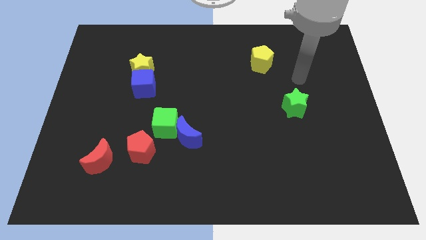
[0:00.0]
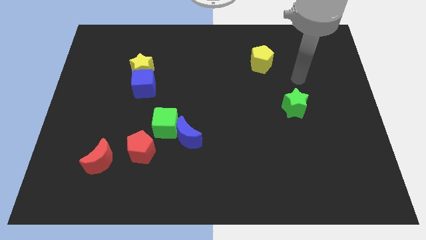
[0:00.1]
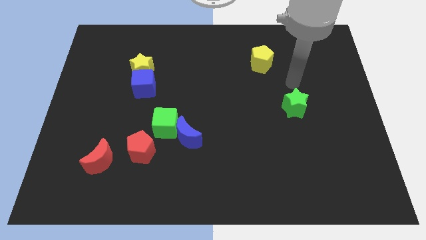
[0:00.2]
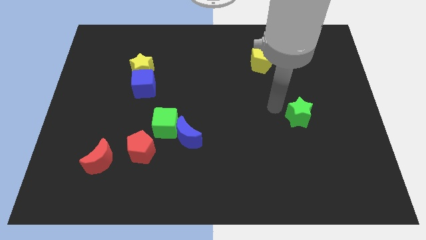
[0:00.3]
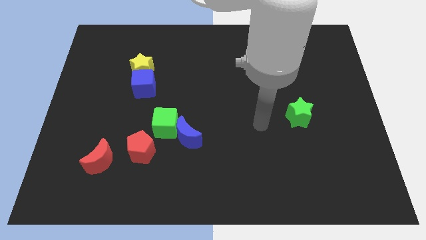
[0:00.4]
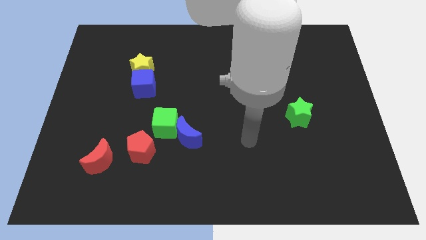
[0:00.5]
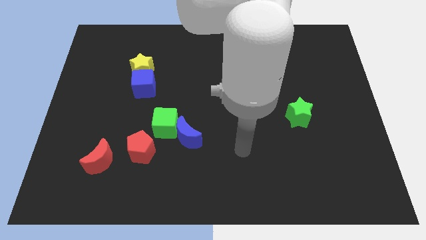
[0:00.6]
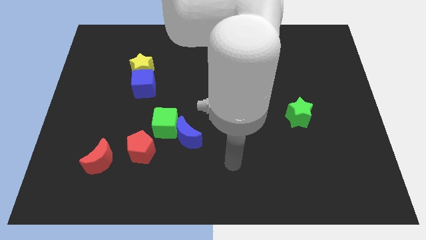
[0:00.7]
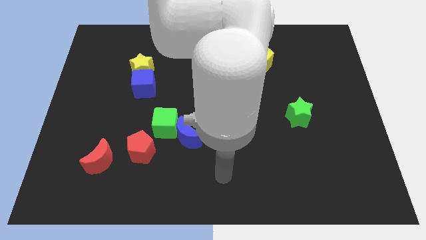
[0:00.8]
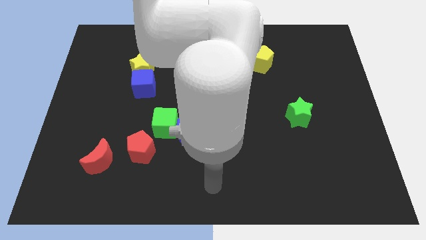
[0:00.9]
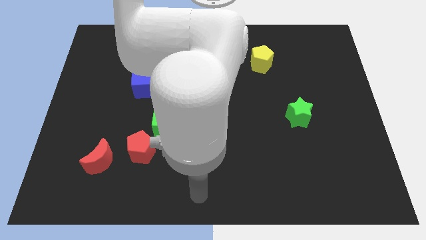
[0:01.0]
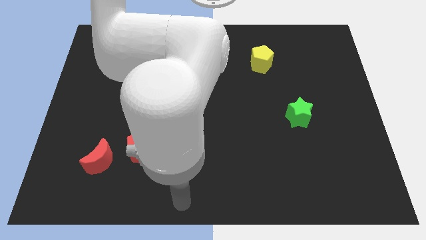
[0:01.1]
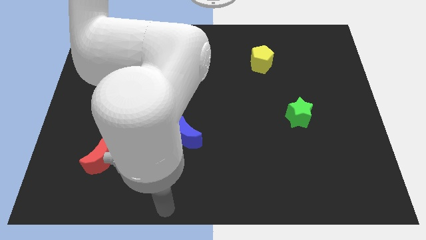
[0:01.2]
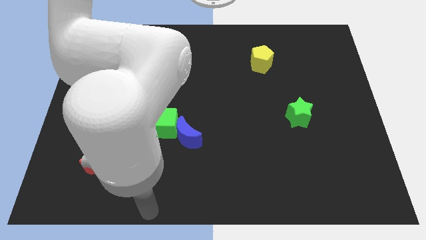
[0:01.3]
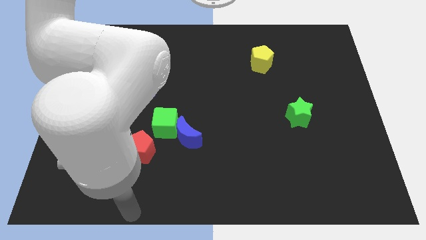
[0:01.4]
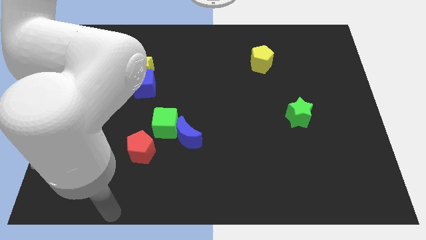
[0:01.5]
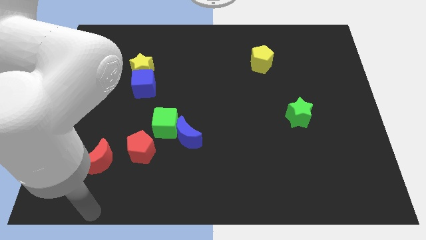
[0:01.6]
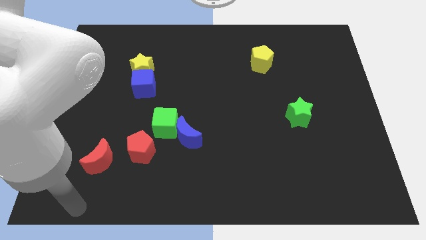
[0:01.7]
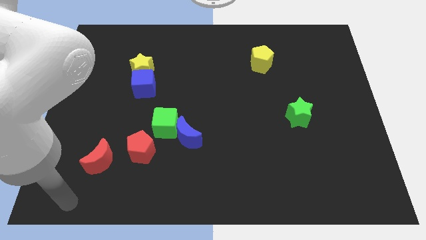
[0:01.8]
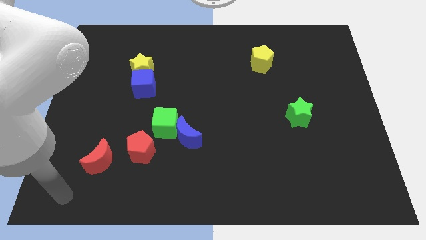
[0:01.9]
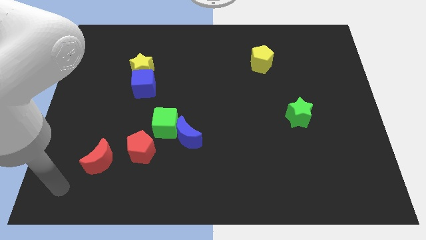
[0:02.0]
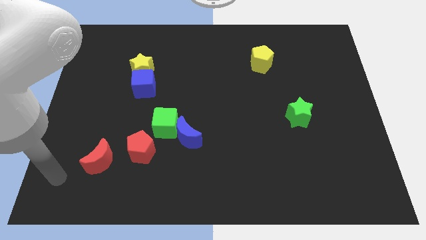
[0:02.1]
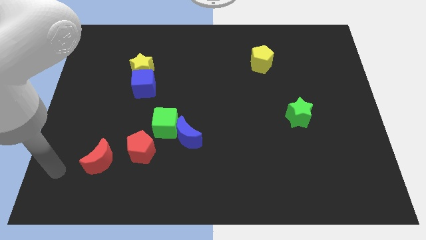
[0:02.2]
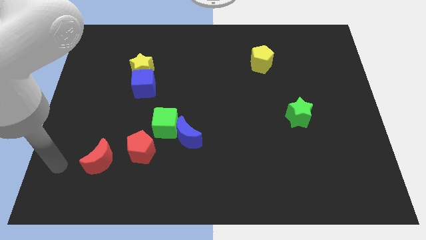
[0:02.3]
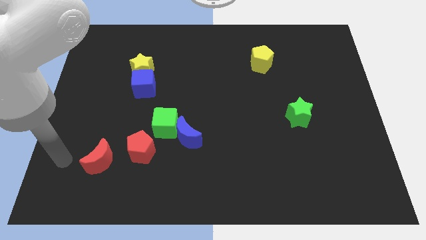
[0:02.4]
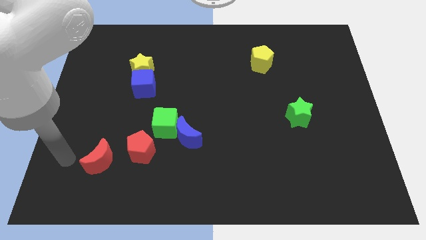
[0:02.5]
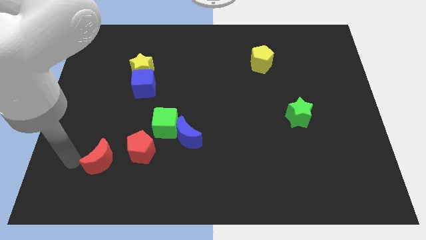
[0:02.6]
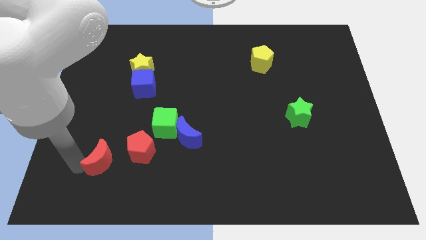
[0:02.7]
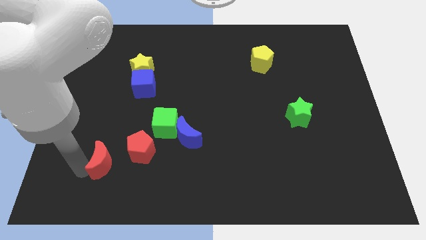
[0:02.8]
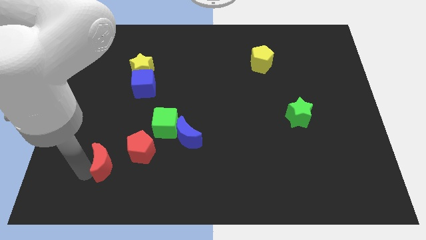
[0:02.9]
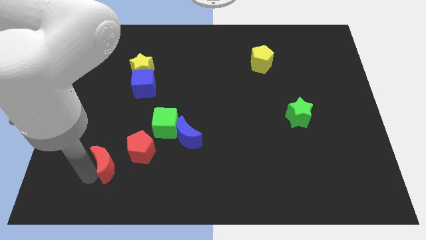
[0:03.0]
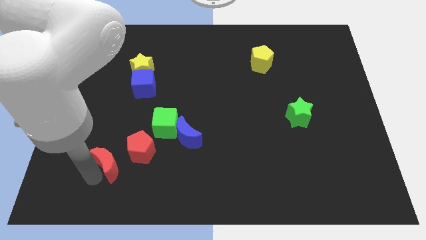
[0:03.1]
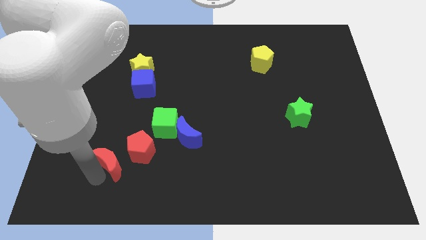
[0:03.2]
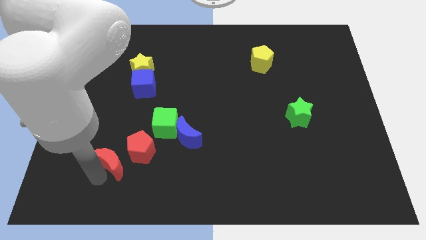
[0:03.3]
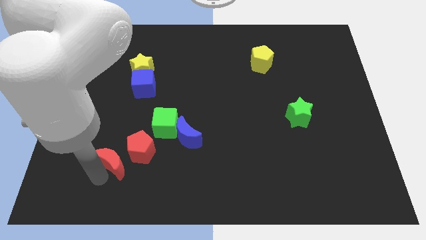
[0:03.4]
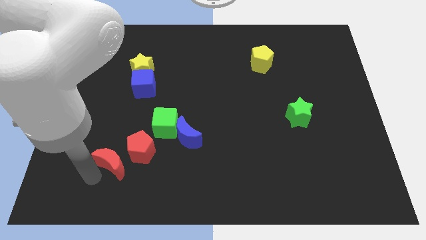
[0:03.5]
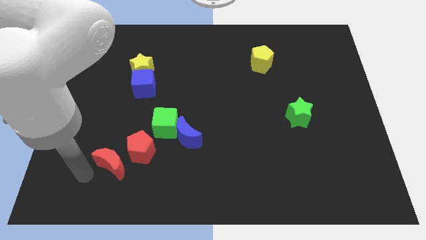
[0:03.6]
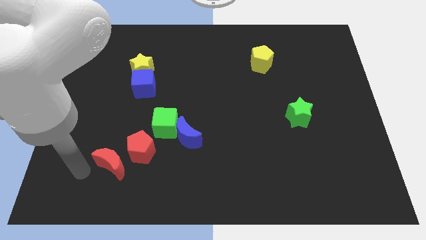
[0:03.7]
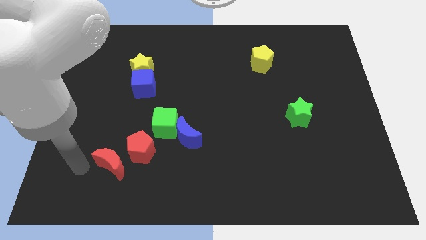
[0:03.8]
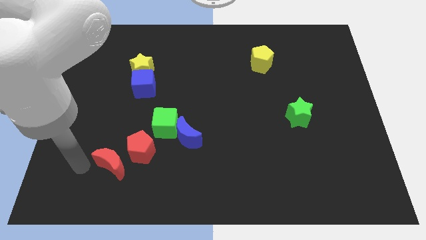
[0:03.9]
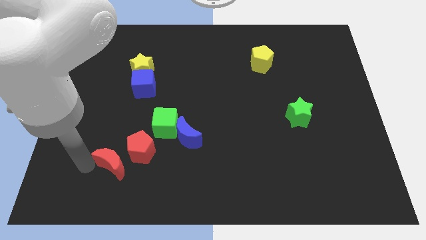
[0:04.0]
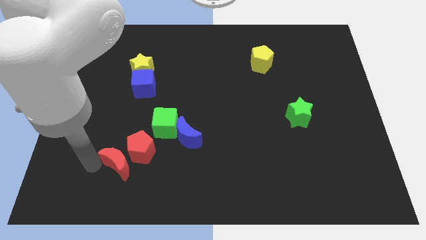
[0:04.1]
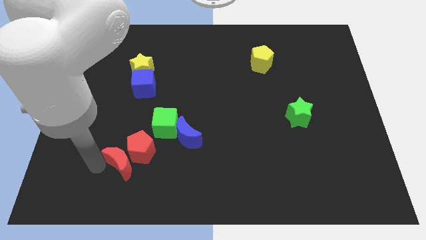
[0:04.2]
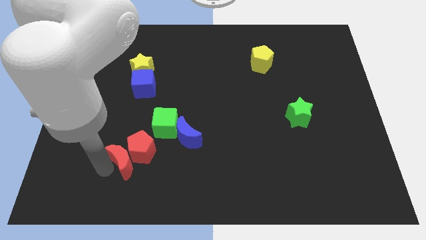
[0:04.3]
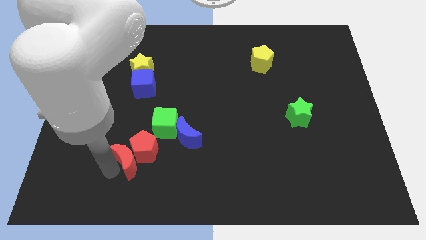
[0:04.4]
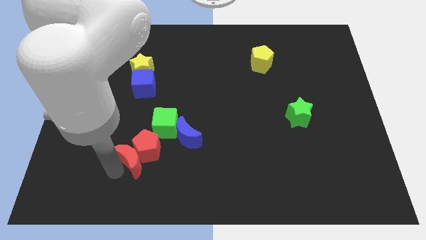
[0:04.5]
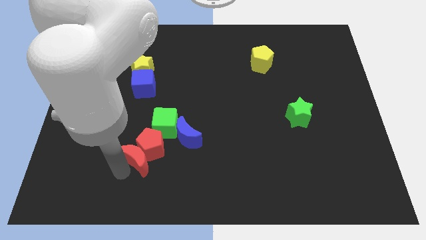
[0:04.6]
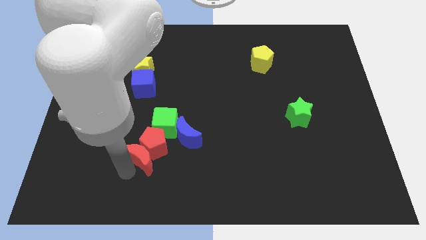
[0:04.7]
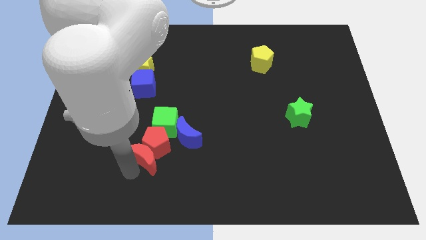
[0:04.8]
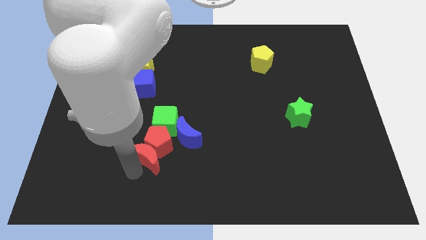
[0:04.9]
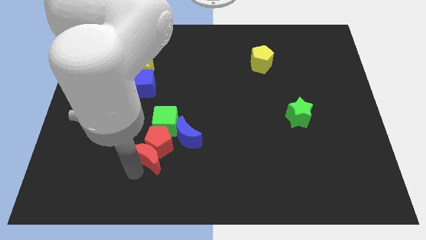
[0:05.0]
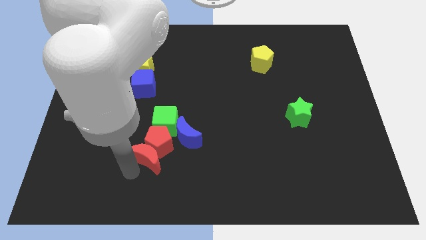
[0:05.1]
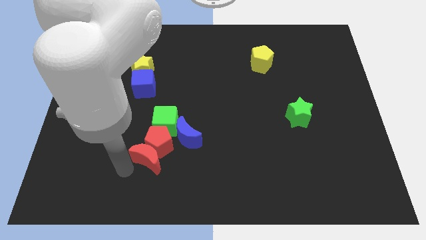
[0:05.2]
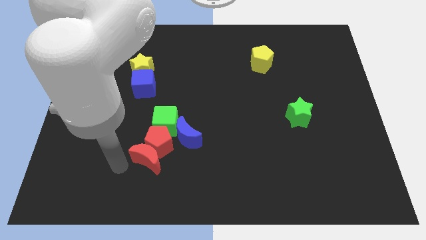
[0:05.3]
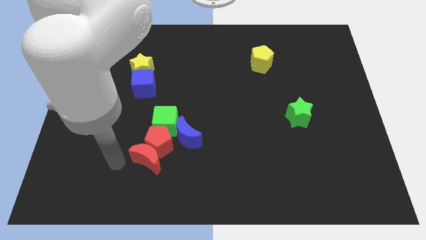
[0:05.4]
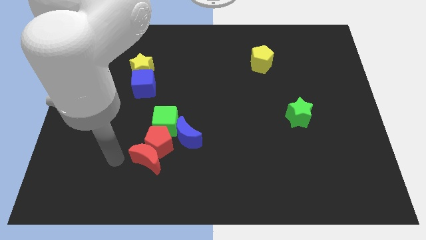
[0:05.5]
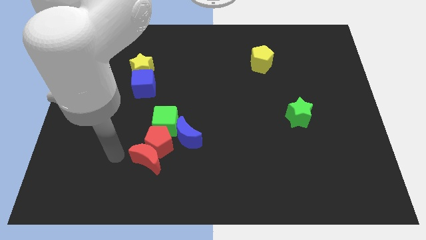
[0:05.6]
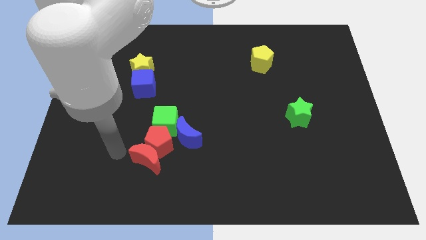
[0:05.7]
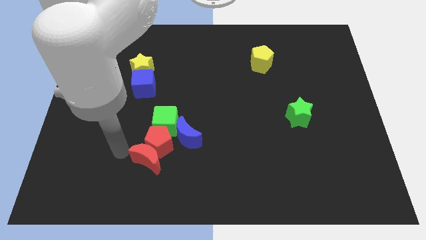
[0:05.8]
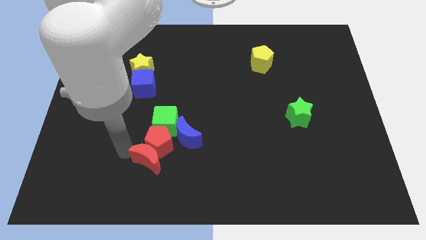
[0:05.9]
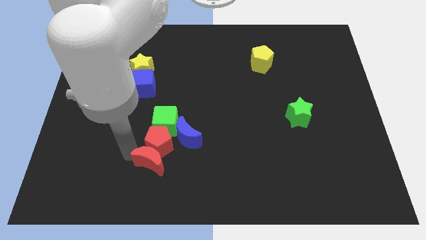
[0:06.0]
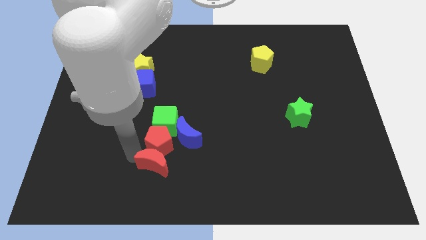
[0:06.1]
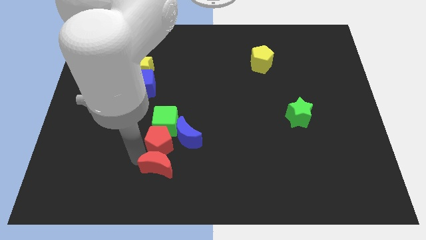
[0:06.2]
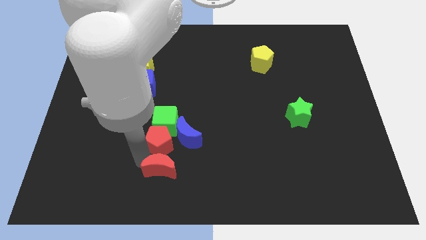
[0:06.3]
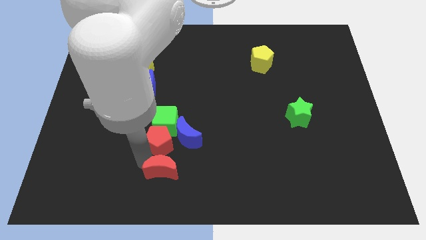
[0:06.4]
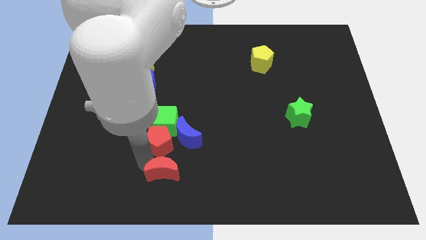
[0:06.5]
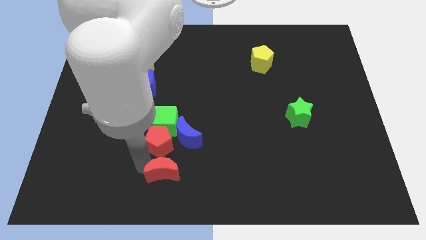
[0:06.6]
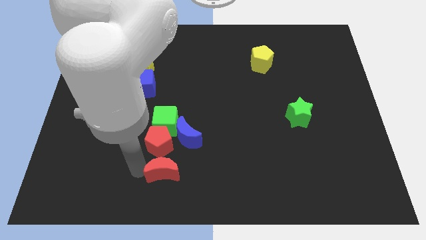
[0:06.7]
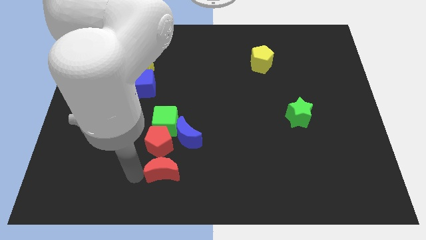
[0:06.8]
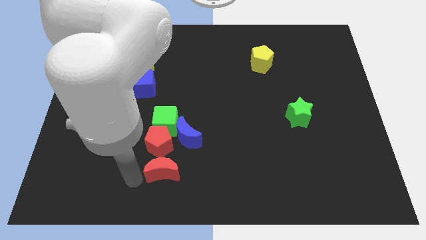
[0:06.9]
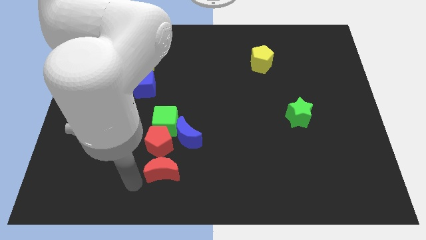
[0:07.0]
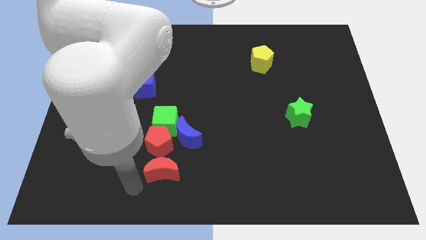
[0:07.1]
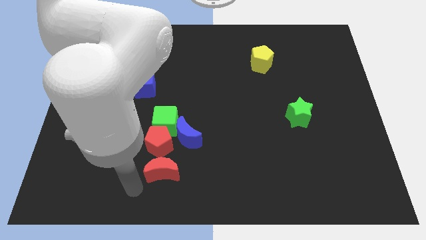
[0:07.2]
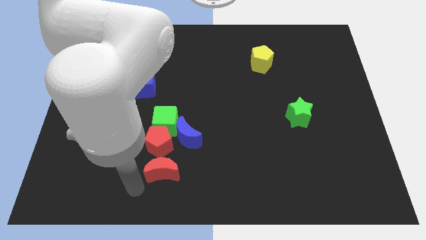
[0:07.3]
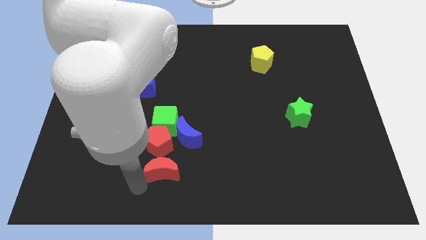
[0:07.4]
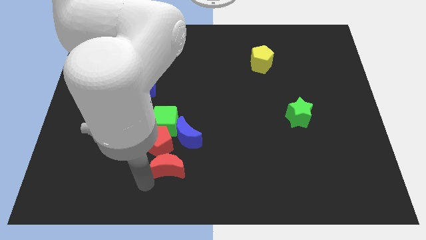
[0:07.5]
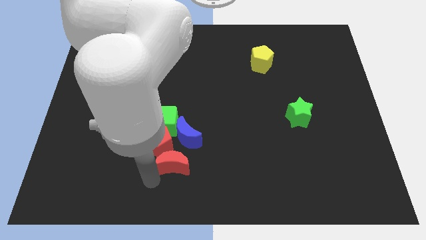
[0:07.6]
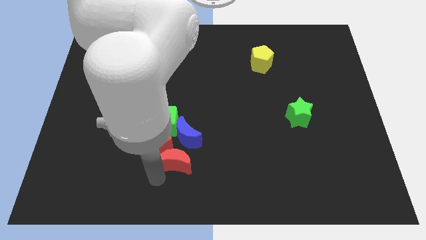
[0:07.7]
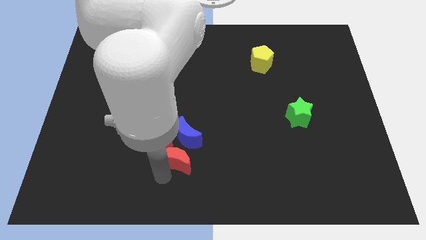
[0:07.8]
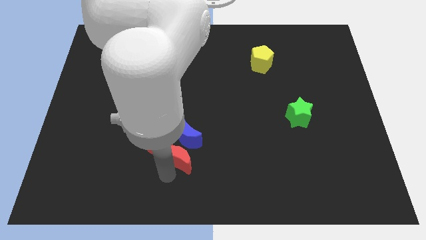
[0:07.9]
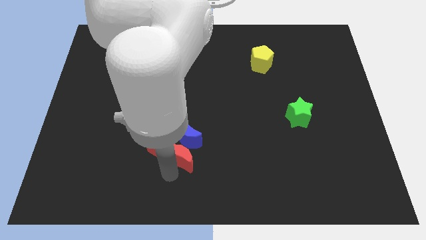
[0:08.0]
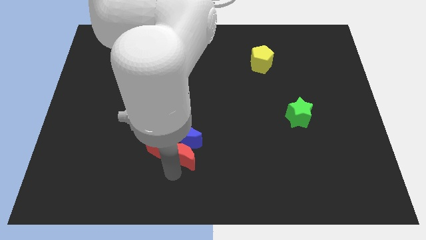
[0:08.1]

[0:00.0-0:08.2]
slide the red moon to the blue moon

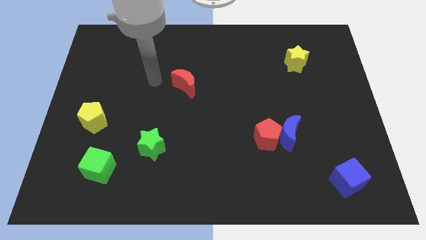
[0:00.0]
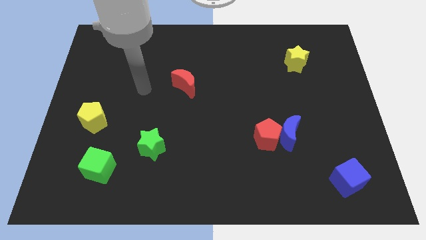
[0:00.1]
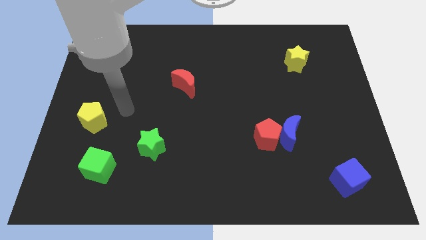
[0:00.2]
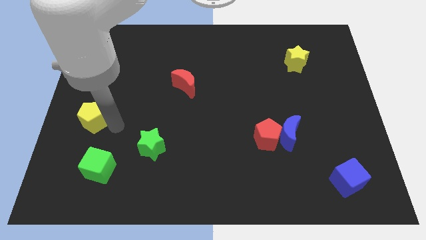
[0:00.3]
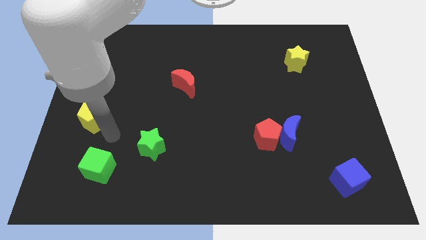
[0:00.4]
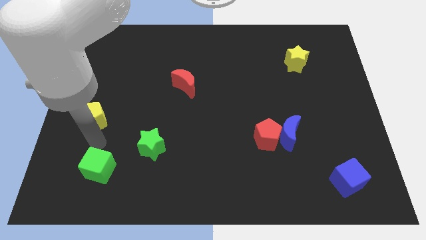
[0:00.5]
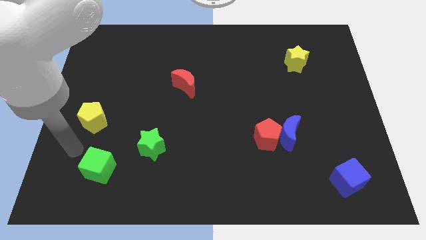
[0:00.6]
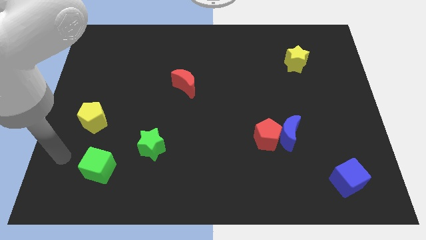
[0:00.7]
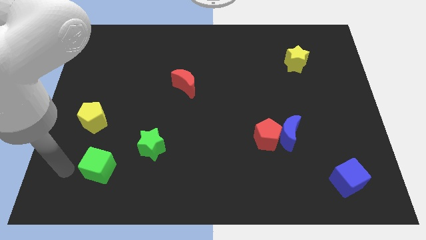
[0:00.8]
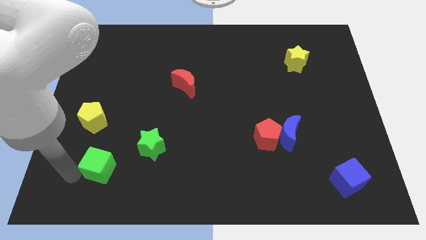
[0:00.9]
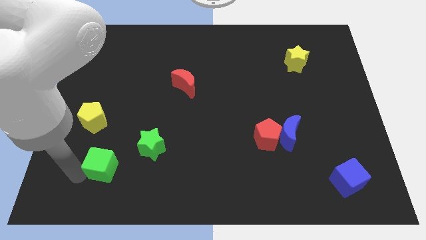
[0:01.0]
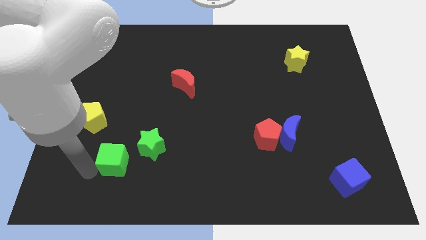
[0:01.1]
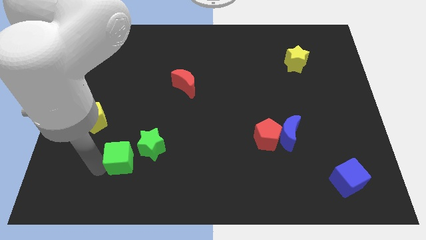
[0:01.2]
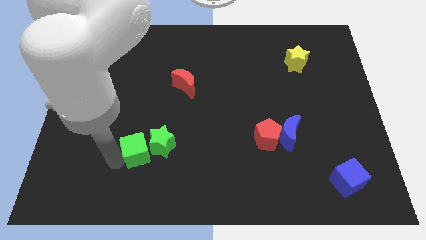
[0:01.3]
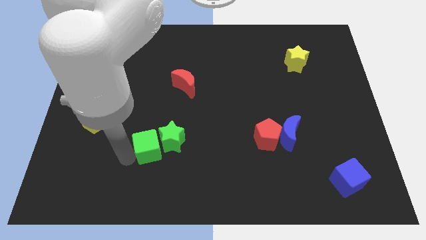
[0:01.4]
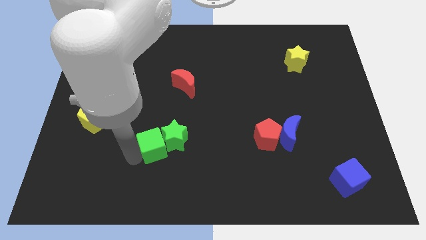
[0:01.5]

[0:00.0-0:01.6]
push the green cube close to the green star
